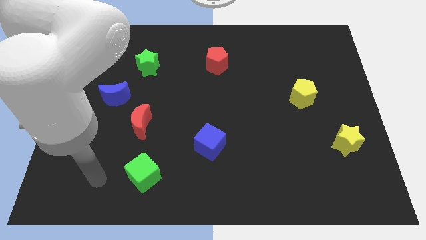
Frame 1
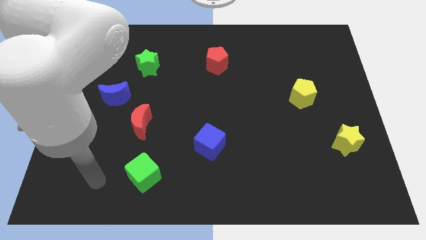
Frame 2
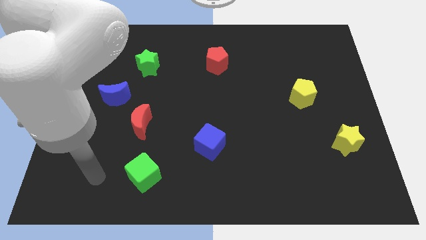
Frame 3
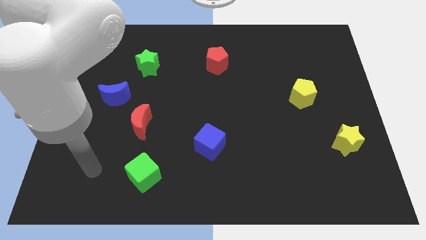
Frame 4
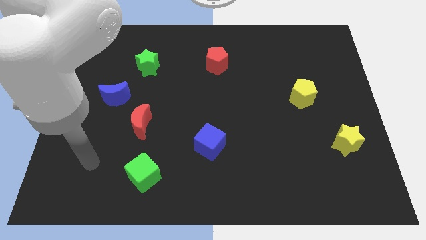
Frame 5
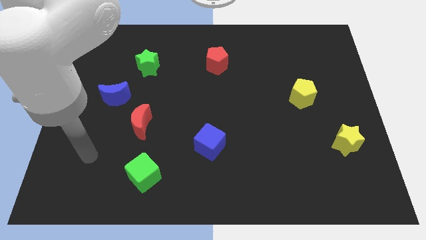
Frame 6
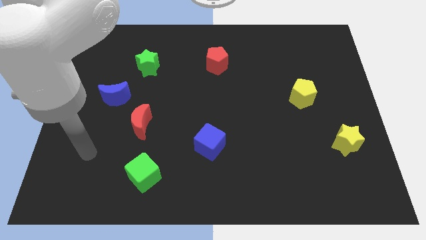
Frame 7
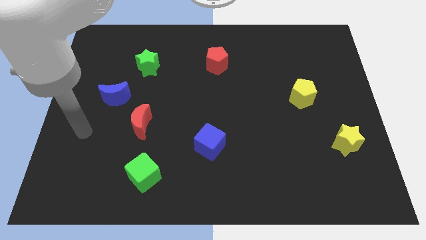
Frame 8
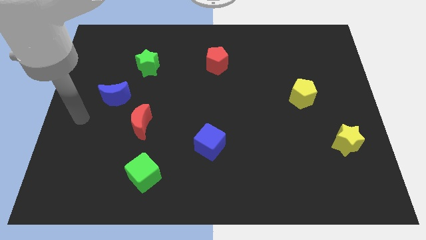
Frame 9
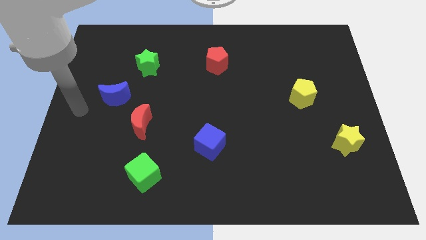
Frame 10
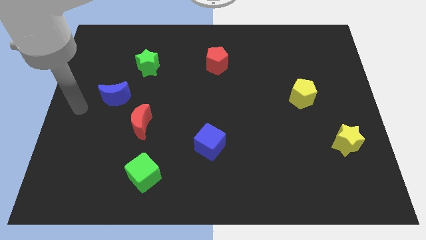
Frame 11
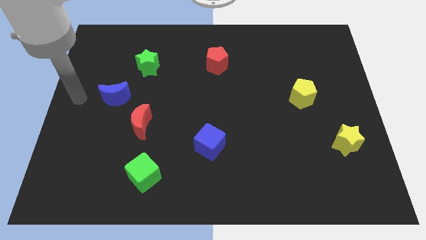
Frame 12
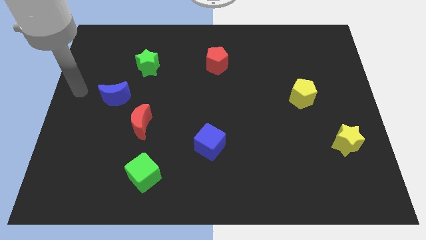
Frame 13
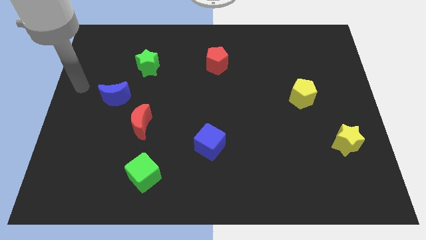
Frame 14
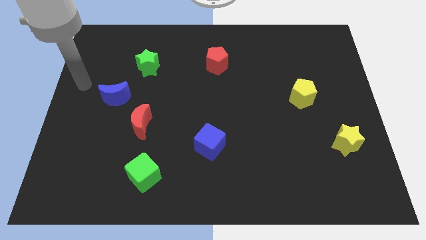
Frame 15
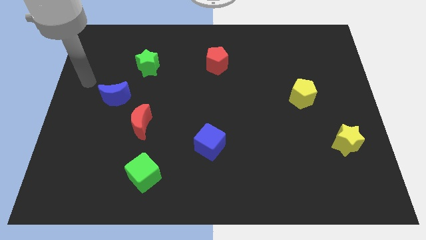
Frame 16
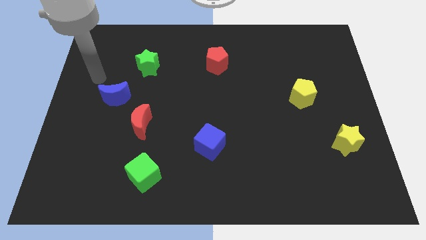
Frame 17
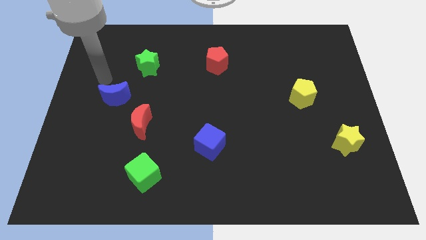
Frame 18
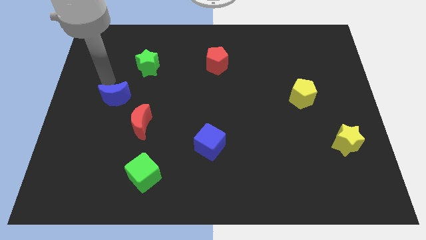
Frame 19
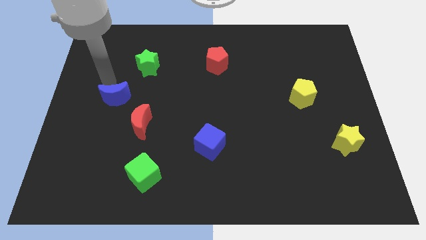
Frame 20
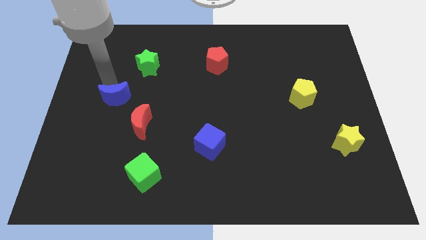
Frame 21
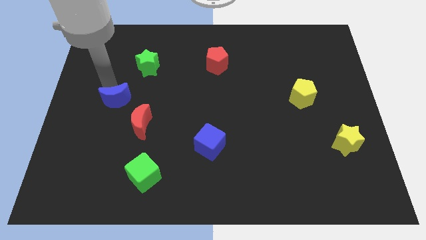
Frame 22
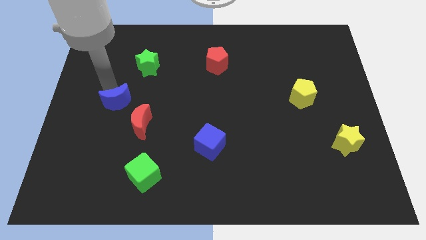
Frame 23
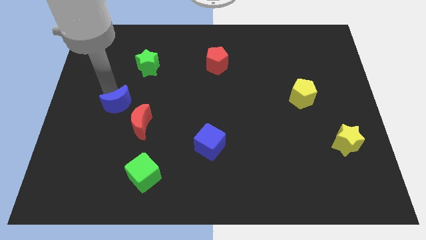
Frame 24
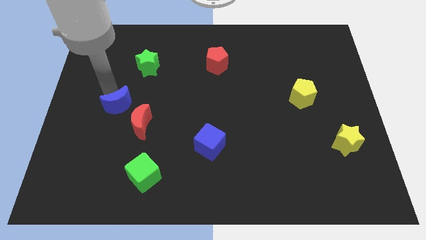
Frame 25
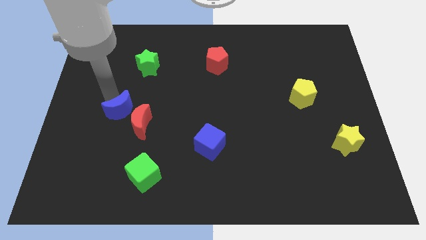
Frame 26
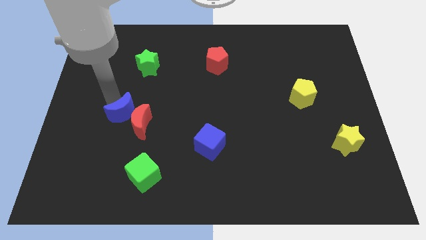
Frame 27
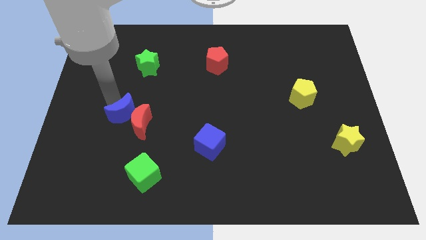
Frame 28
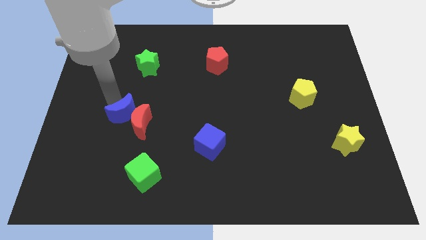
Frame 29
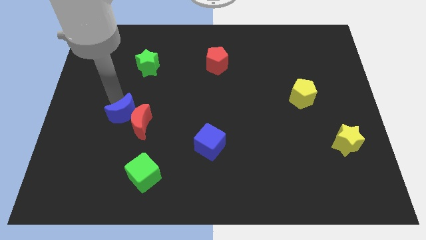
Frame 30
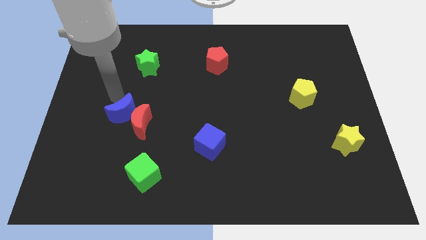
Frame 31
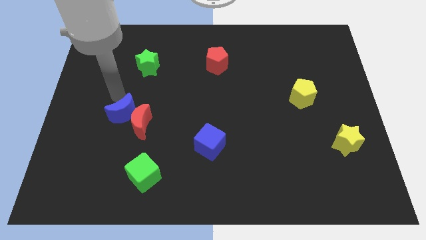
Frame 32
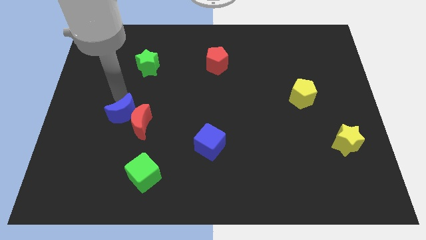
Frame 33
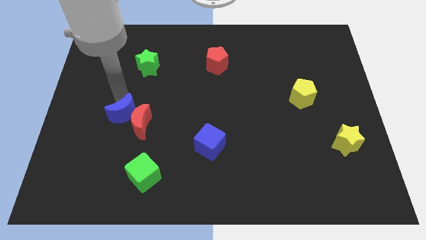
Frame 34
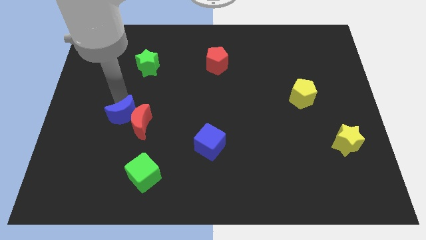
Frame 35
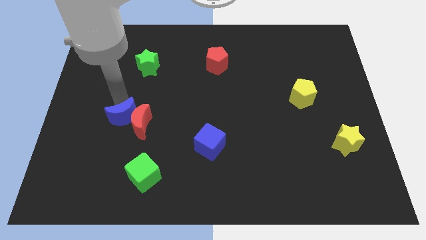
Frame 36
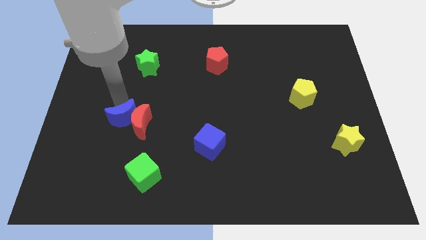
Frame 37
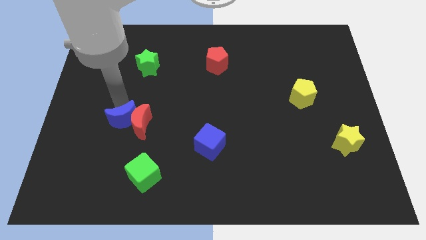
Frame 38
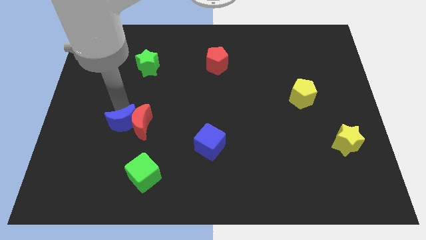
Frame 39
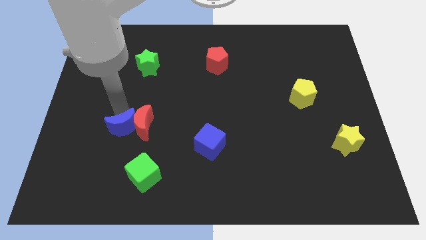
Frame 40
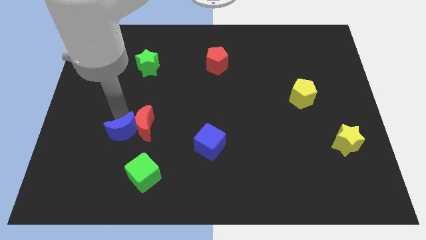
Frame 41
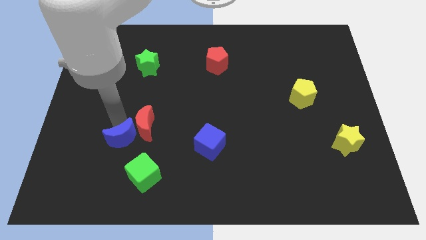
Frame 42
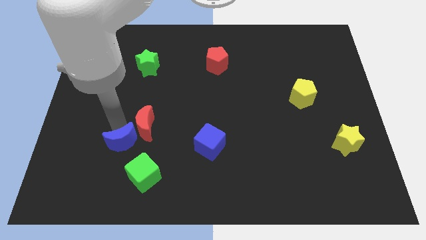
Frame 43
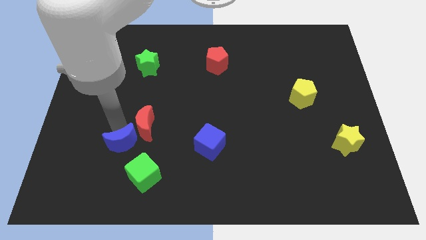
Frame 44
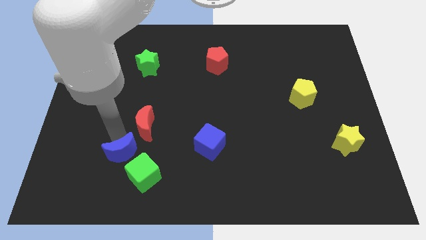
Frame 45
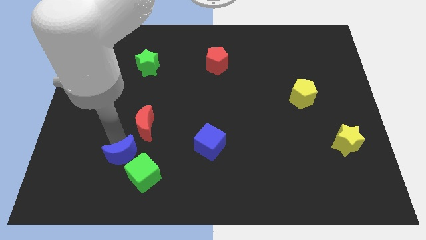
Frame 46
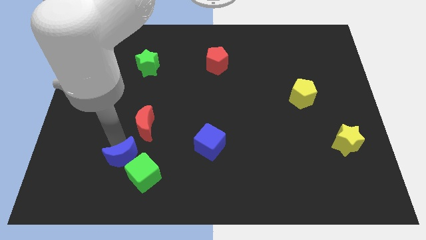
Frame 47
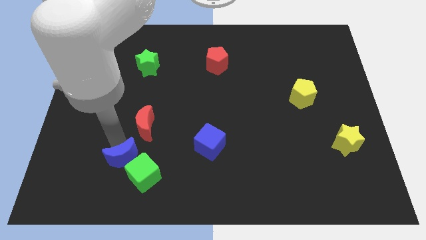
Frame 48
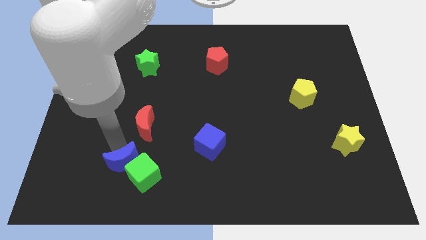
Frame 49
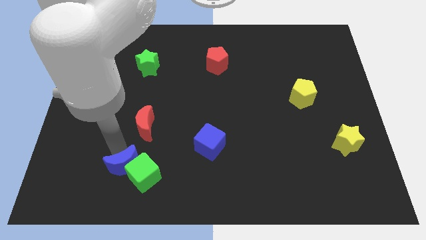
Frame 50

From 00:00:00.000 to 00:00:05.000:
push the blue moon close to the green cube

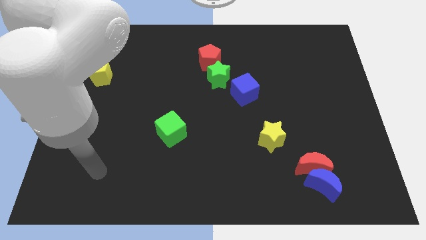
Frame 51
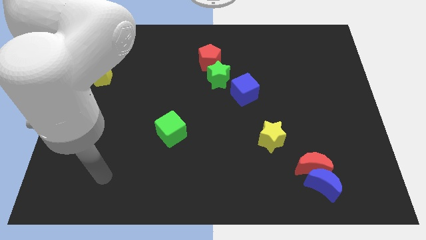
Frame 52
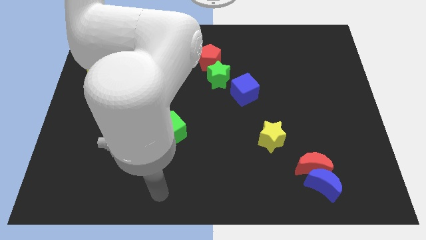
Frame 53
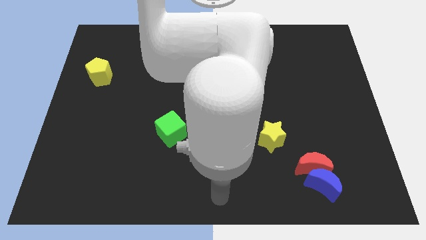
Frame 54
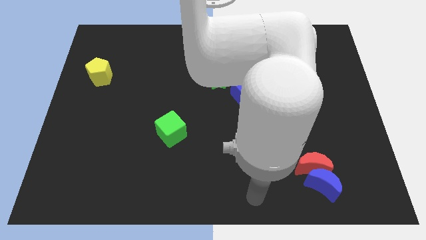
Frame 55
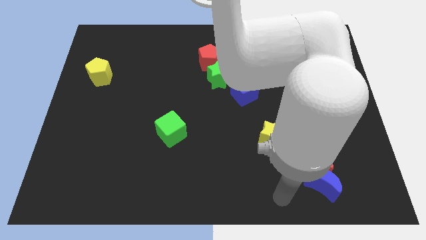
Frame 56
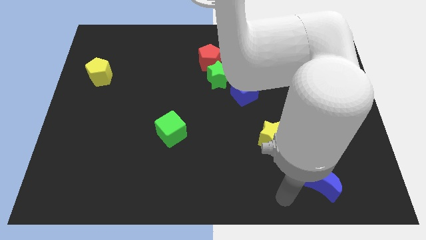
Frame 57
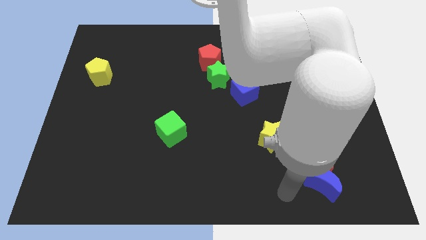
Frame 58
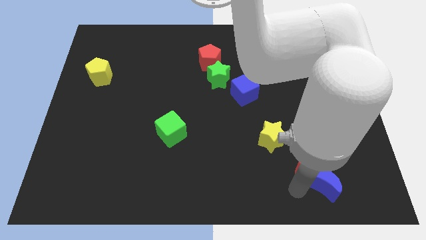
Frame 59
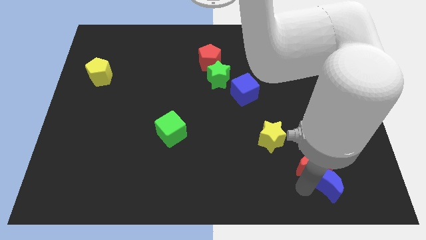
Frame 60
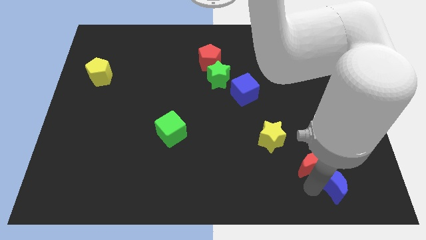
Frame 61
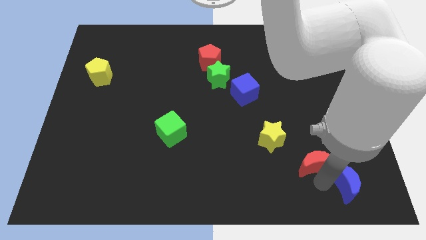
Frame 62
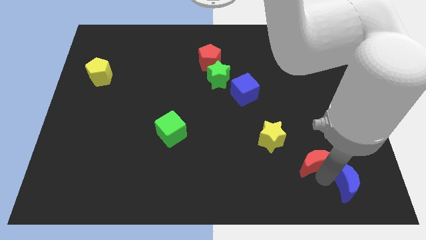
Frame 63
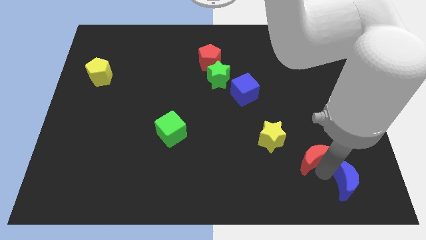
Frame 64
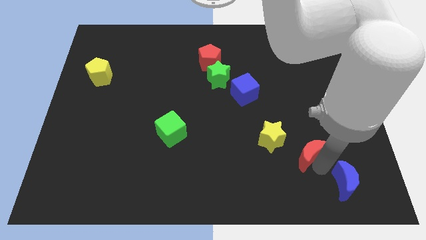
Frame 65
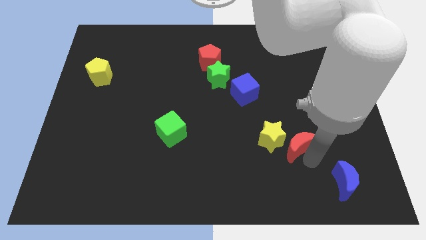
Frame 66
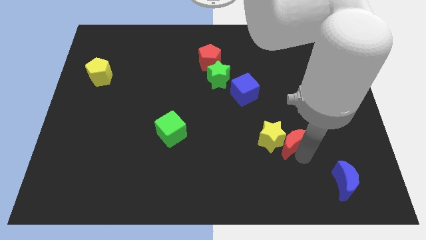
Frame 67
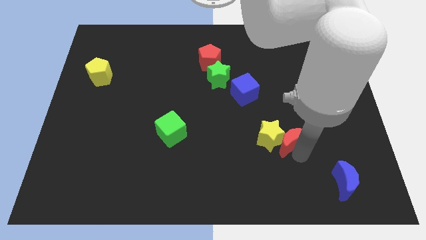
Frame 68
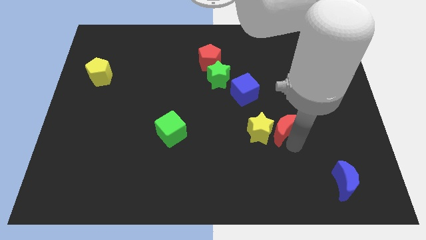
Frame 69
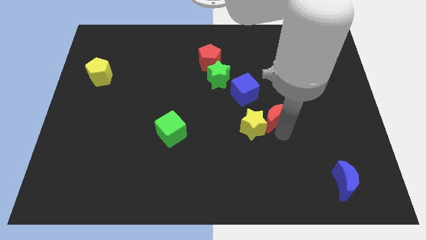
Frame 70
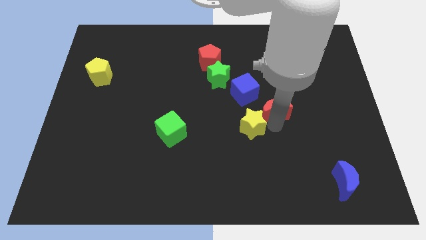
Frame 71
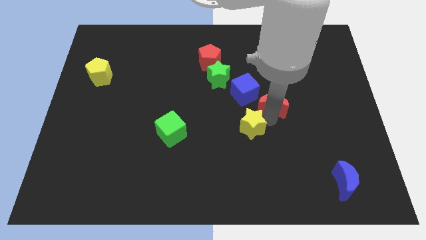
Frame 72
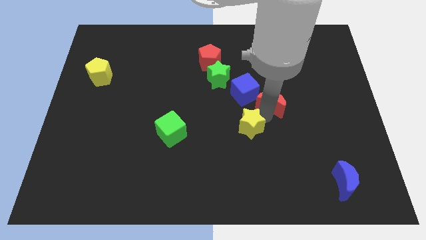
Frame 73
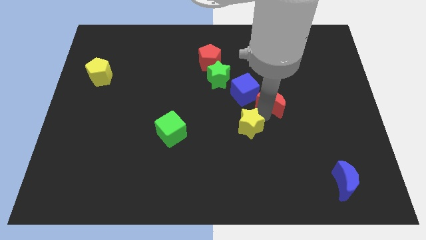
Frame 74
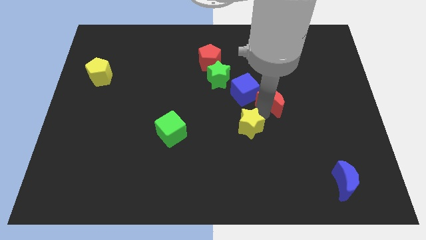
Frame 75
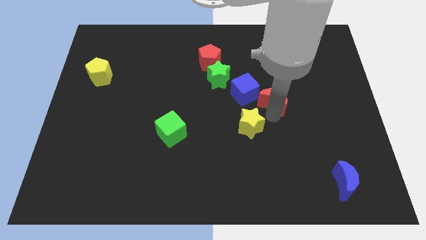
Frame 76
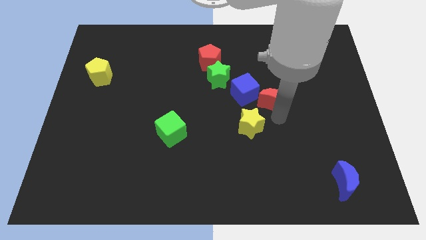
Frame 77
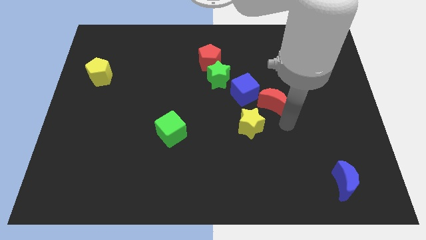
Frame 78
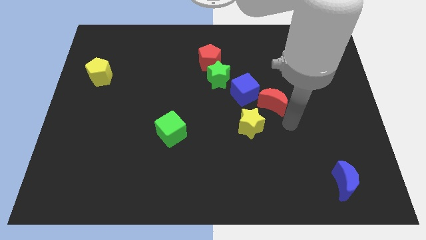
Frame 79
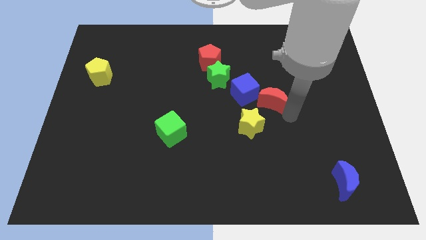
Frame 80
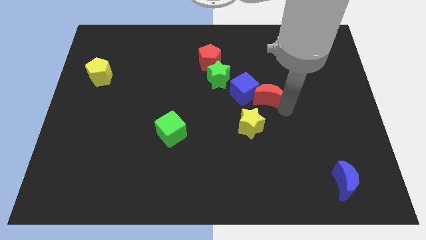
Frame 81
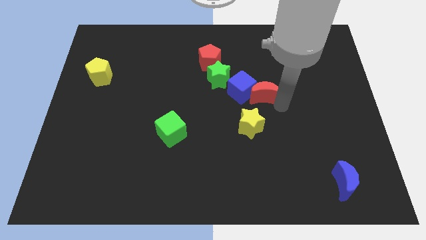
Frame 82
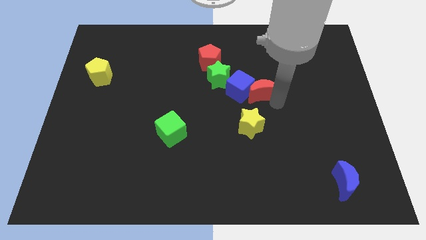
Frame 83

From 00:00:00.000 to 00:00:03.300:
push the red moon close to the blue cube
